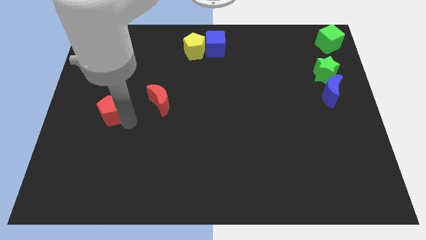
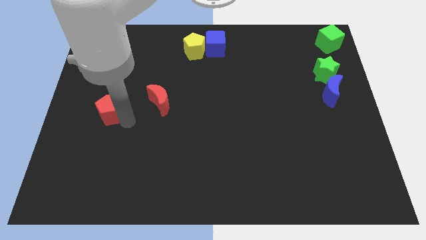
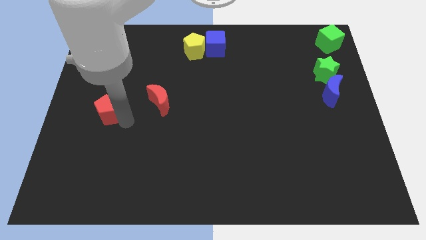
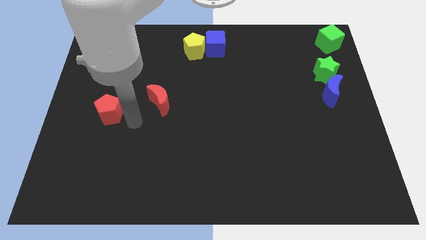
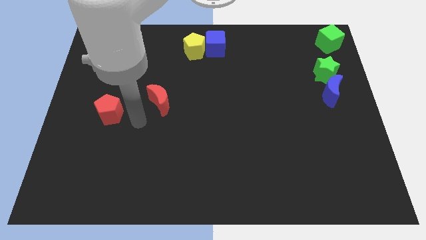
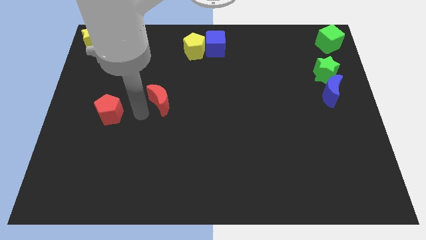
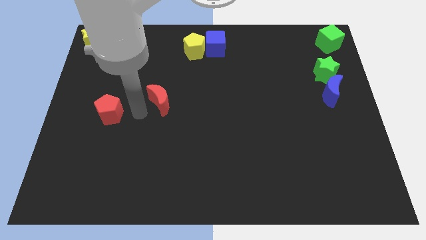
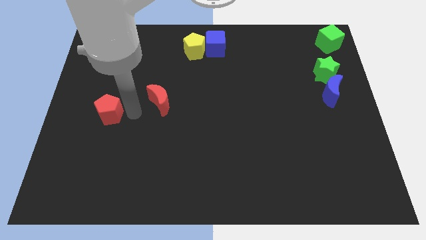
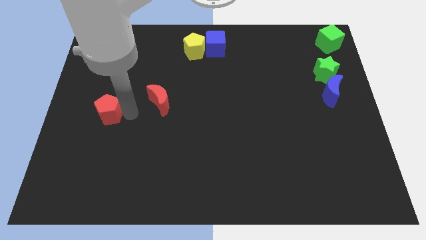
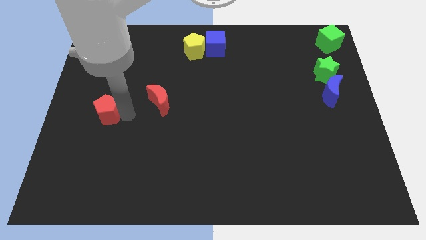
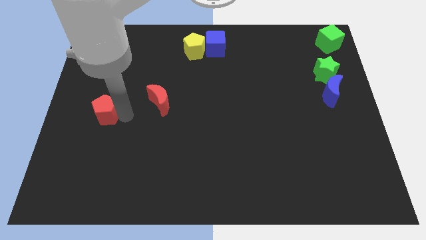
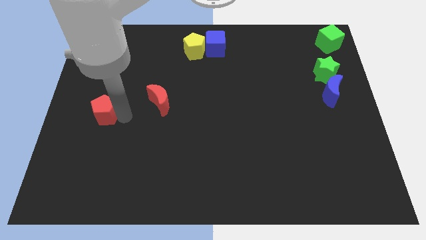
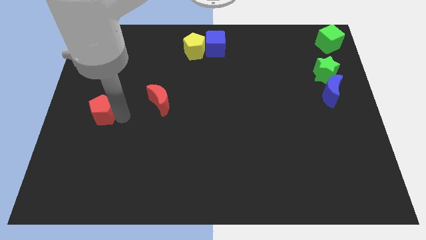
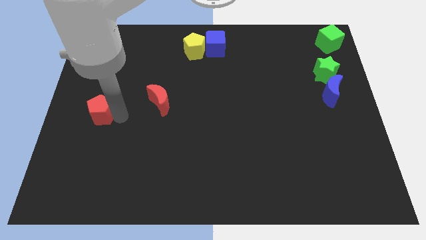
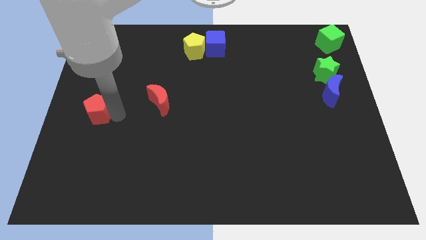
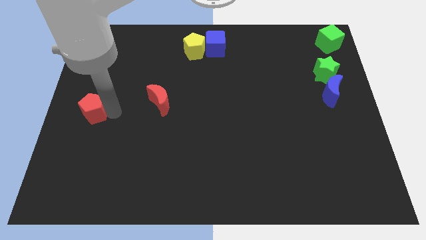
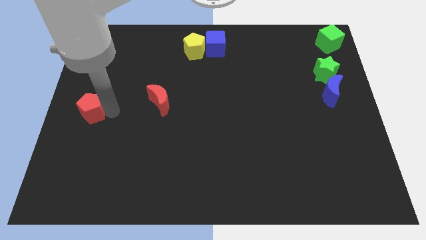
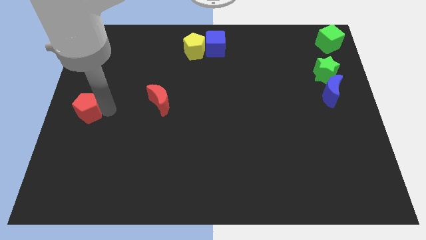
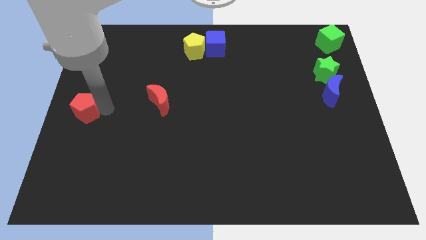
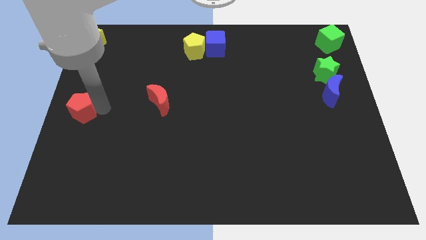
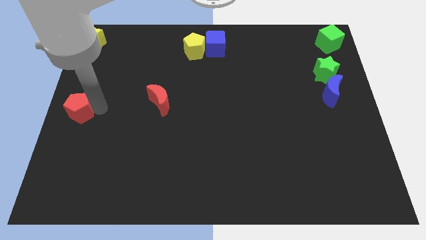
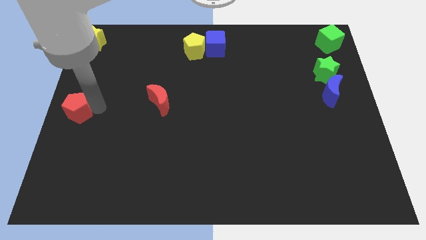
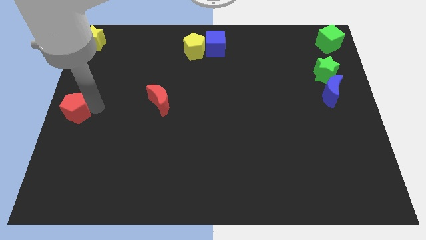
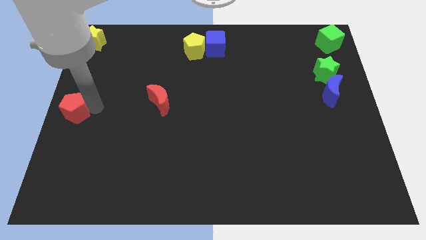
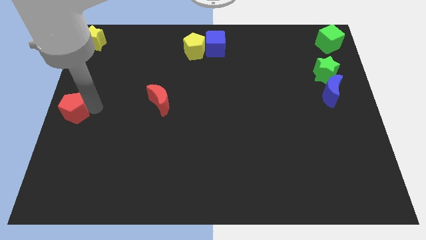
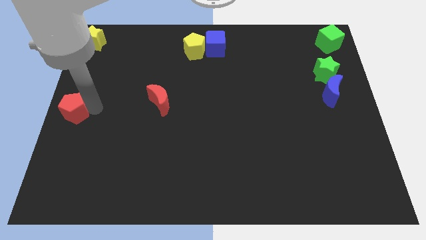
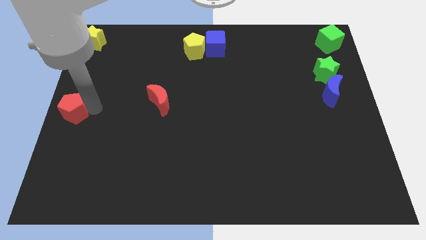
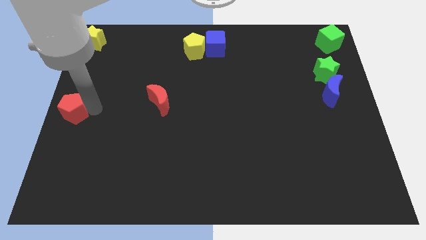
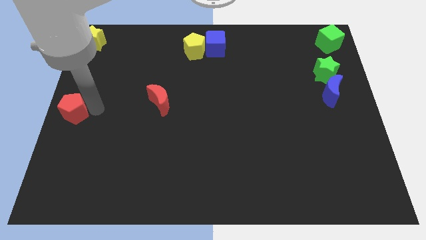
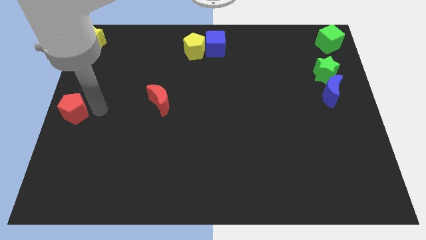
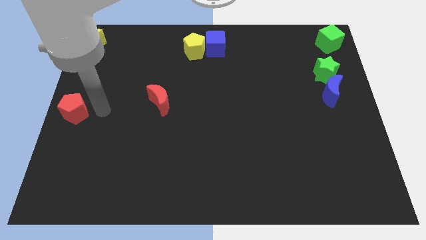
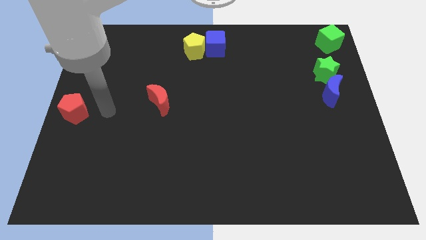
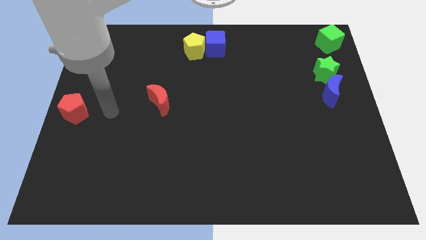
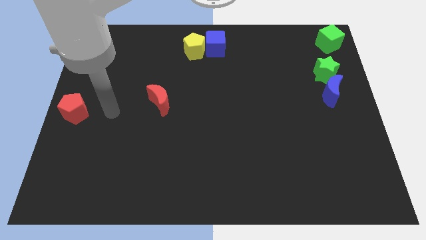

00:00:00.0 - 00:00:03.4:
push red pentagon towards middle left side of the board

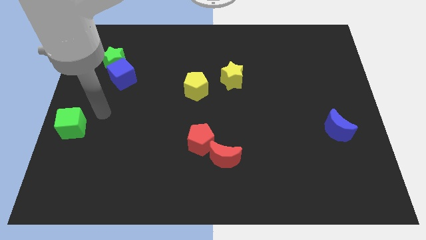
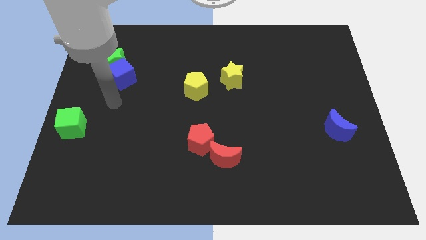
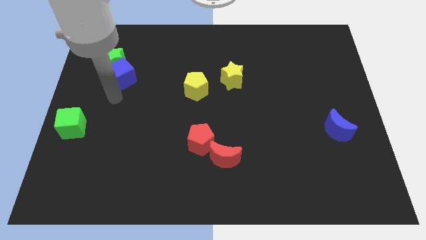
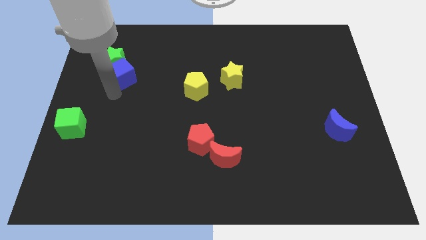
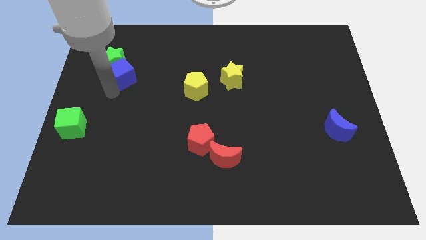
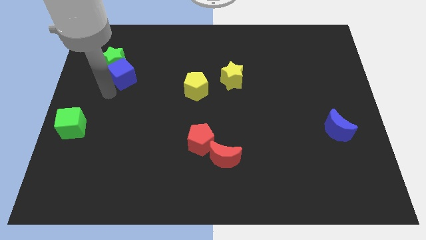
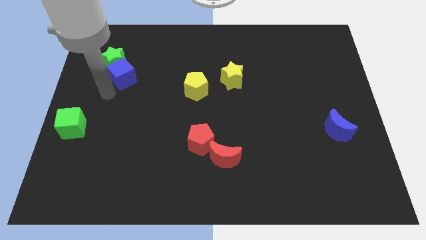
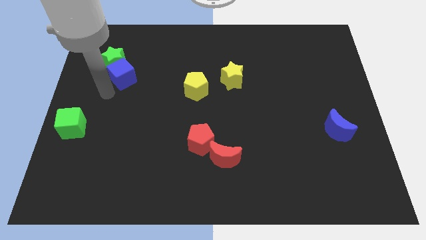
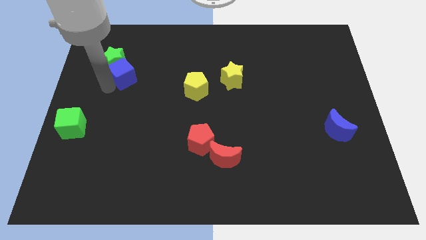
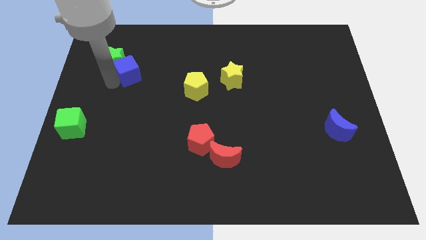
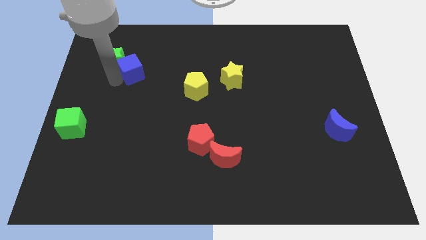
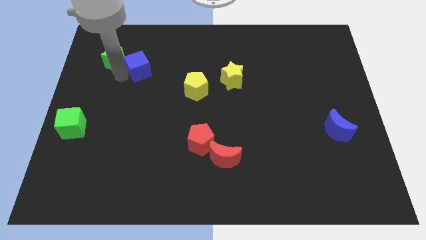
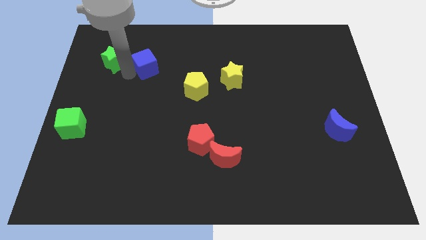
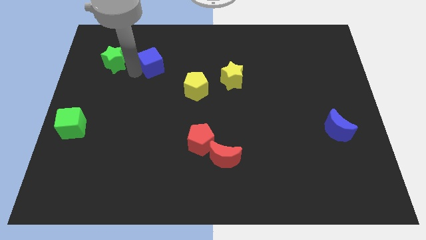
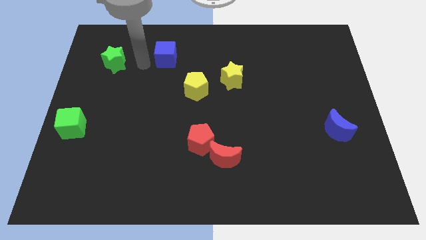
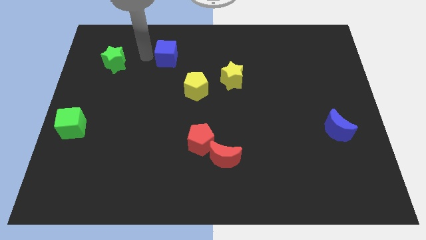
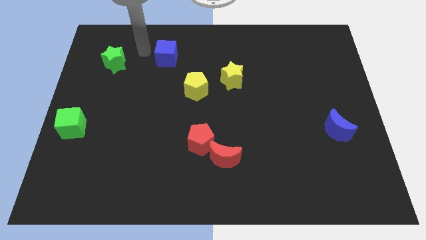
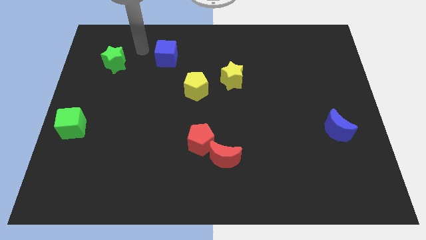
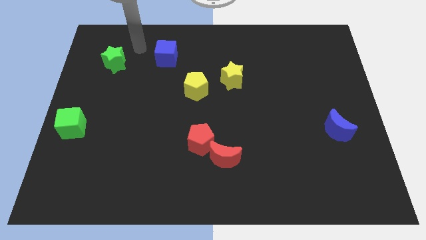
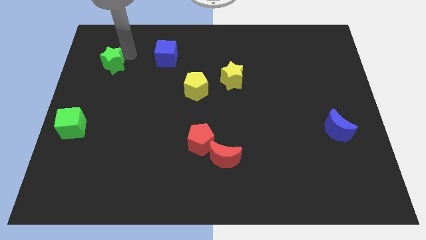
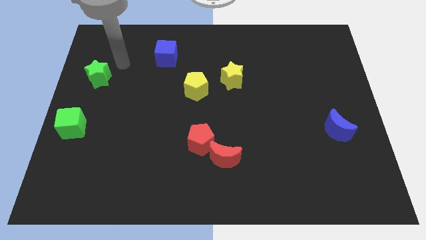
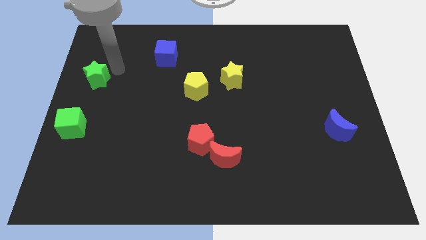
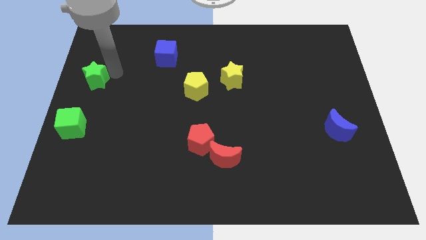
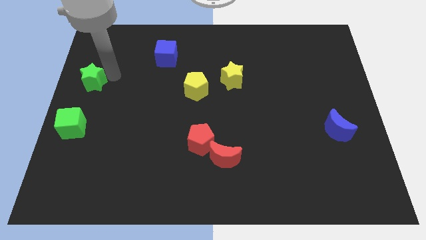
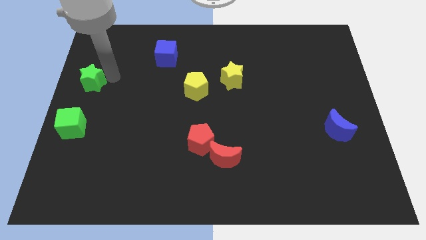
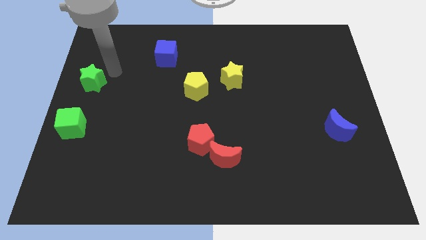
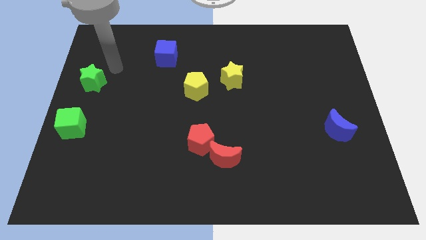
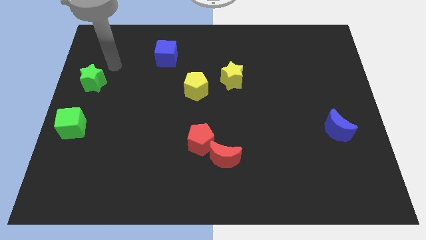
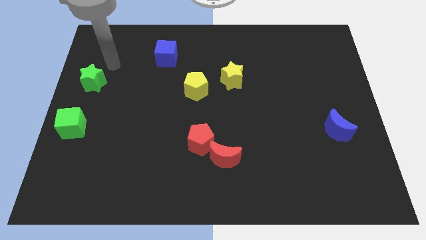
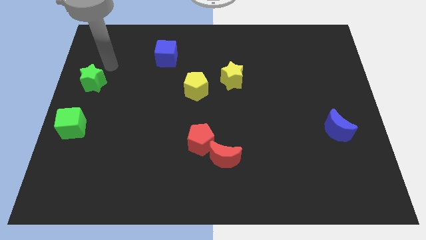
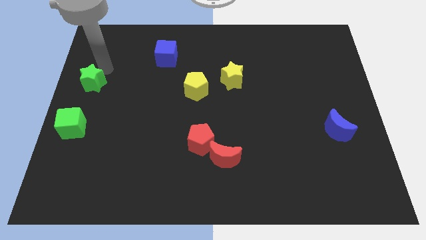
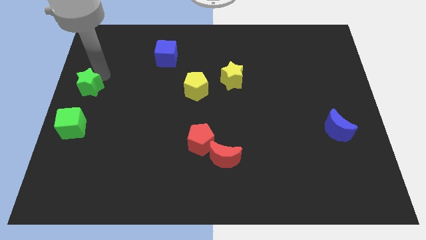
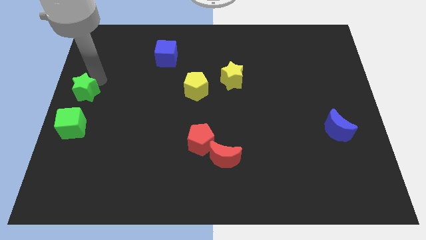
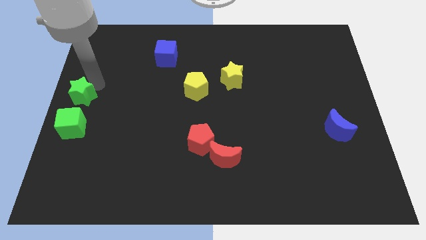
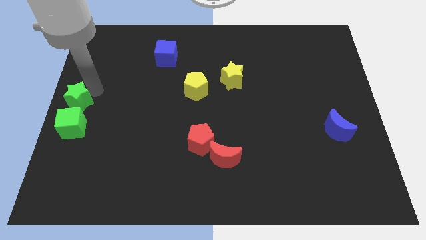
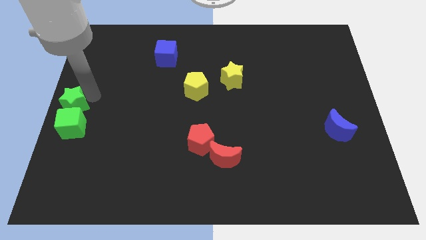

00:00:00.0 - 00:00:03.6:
move the green star to the top of the green cube

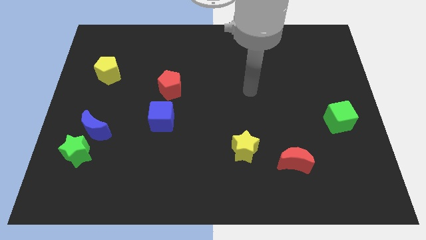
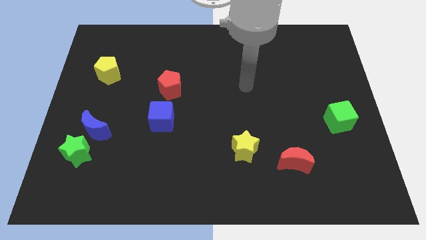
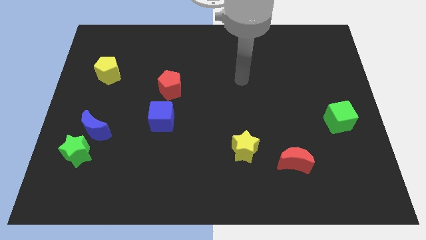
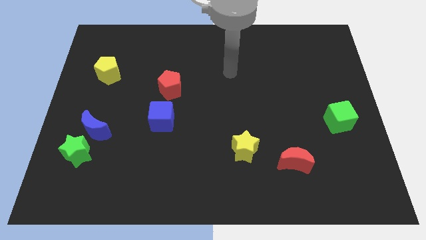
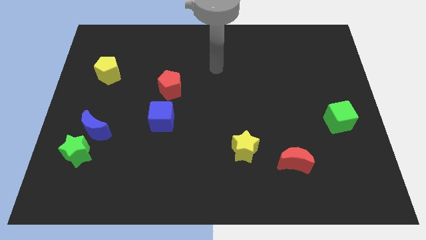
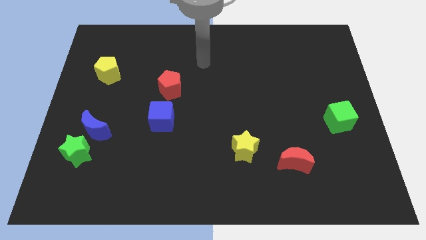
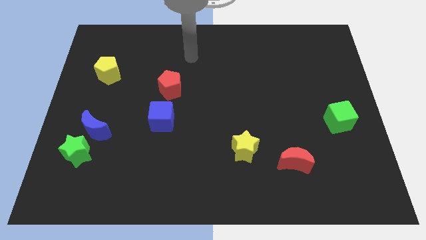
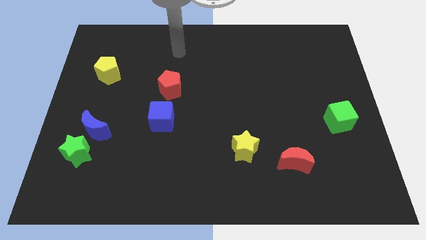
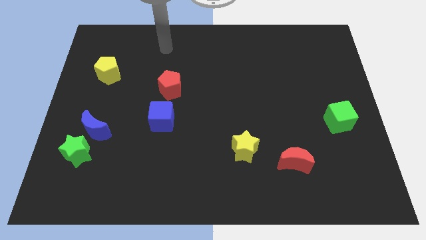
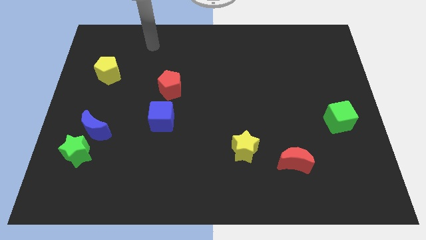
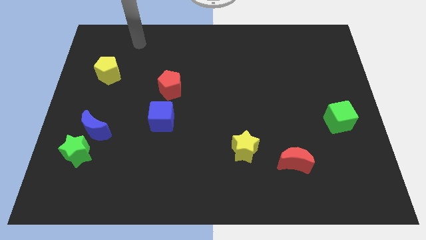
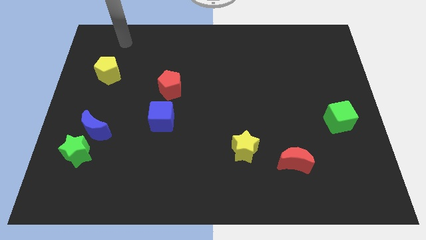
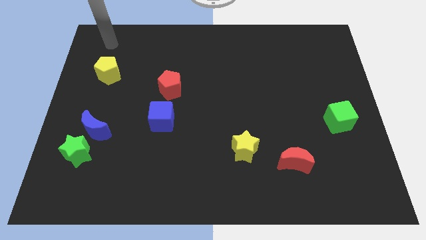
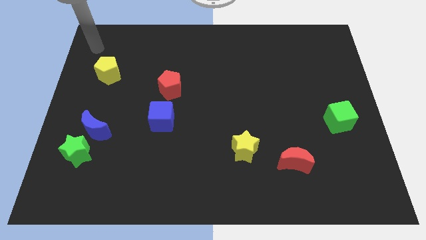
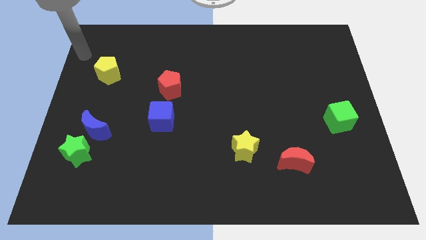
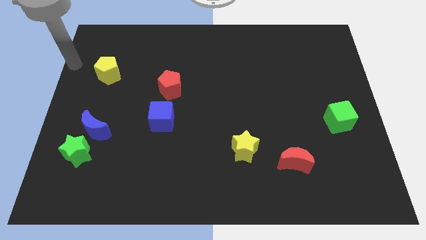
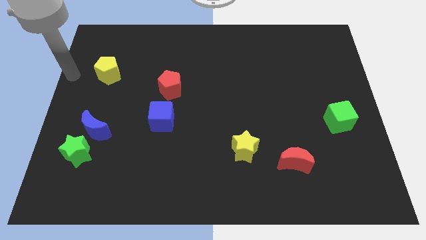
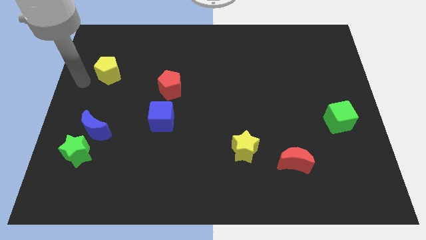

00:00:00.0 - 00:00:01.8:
move your arm to the left side of the yellow pentagon
